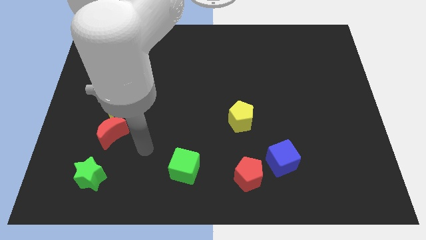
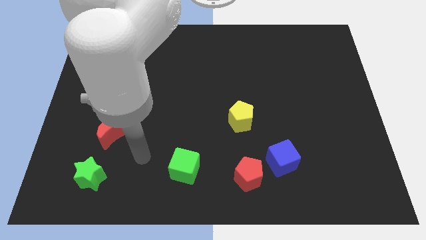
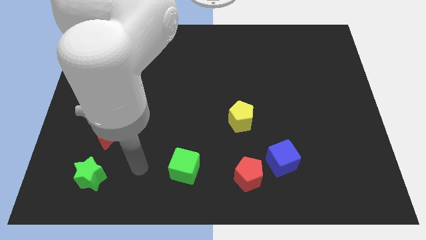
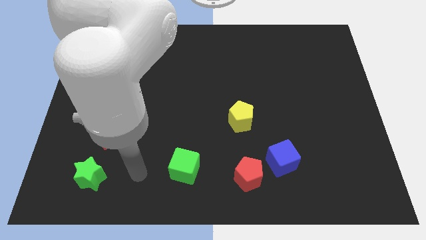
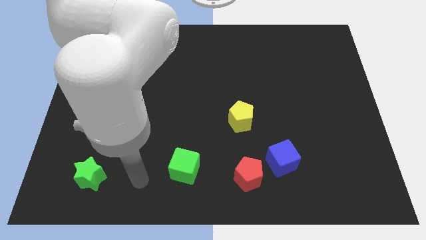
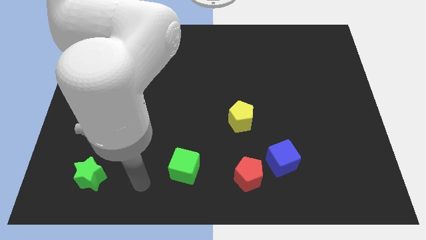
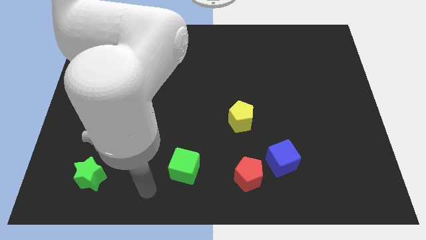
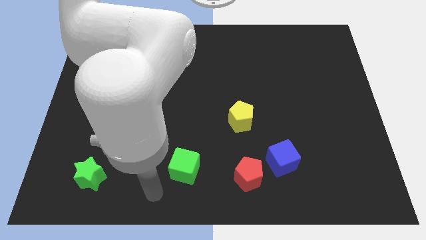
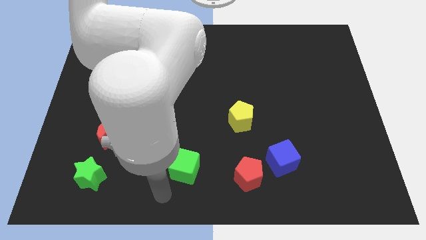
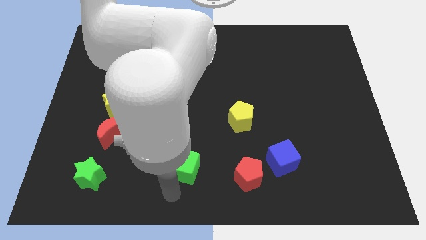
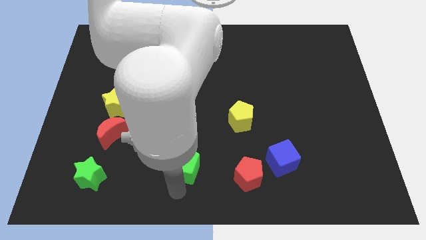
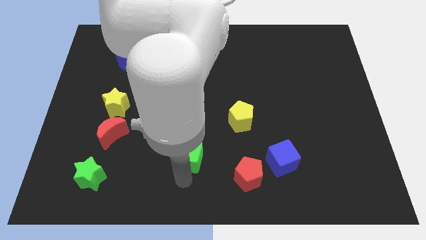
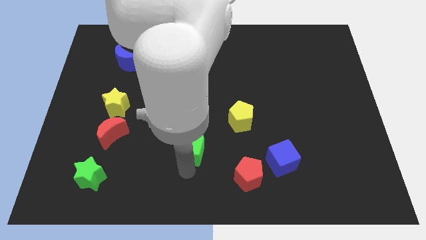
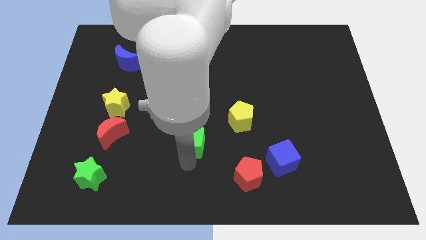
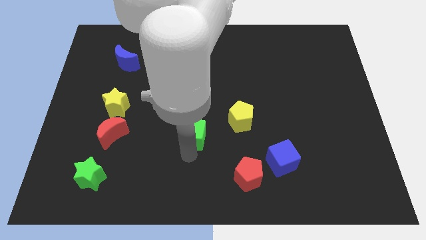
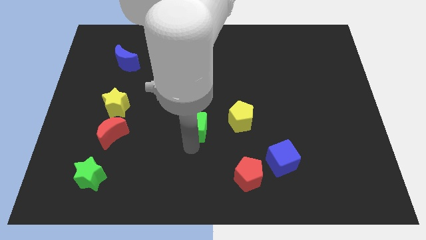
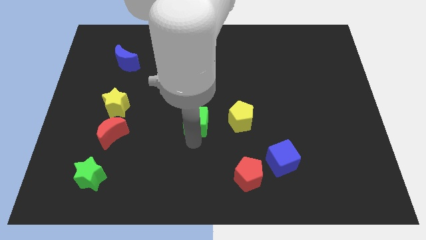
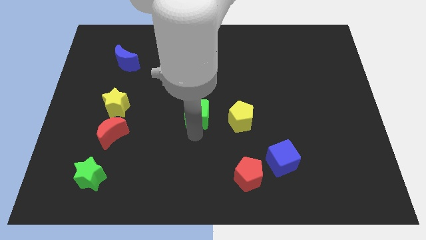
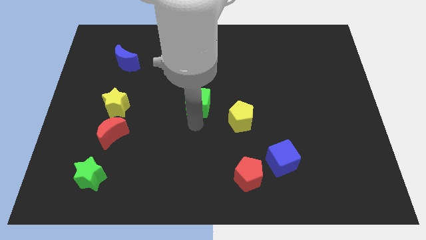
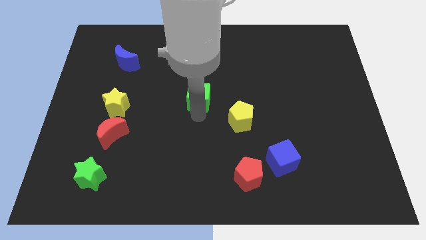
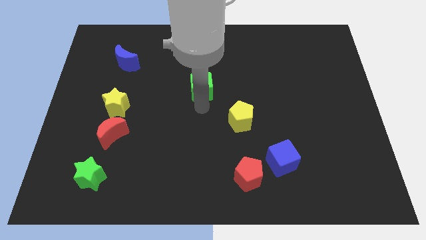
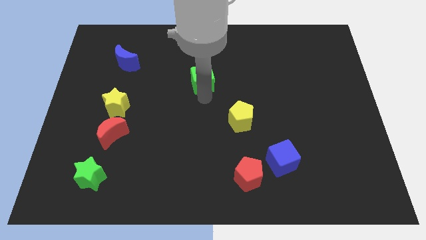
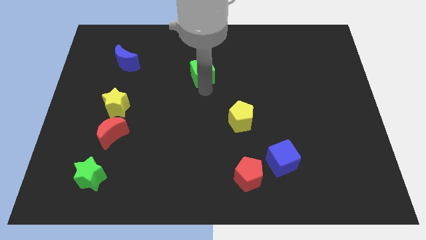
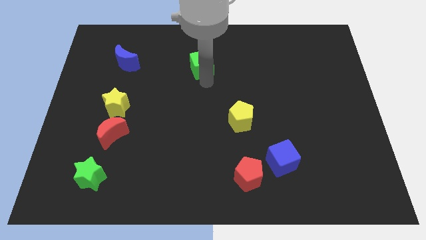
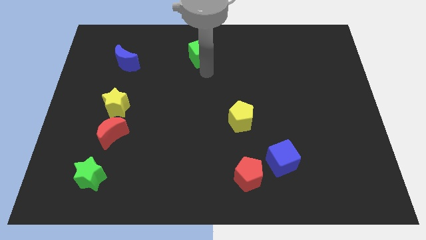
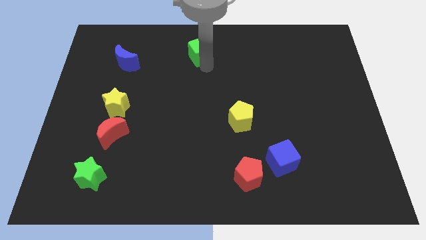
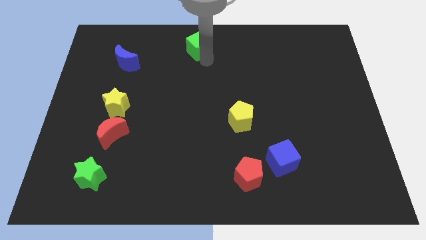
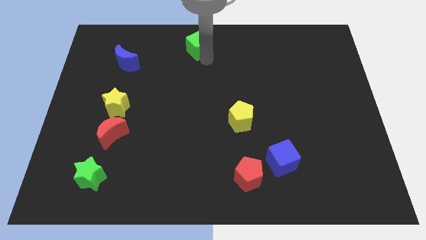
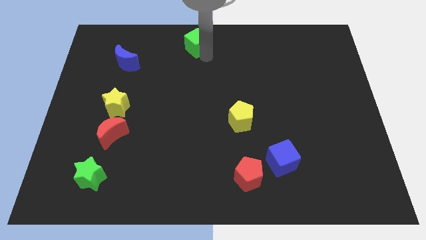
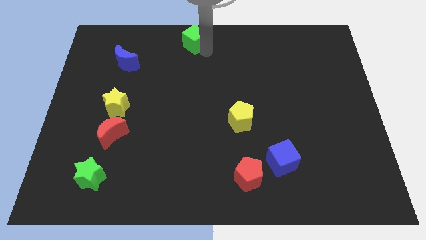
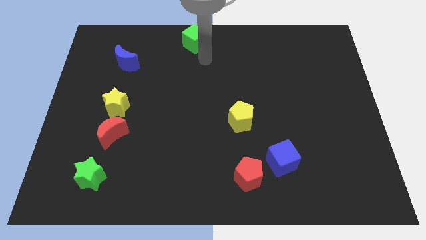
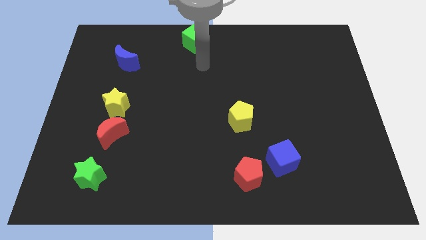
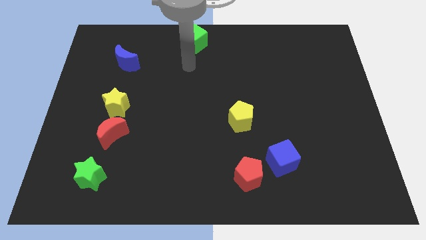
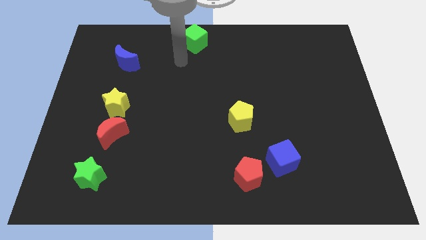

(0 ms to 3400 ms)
push the green cube towards the top center of the board

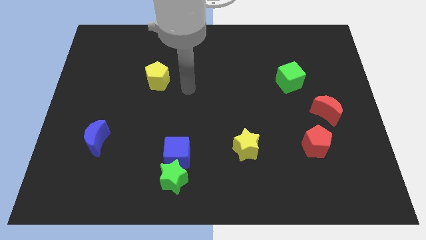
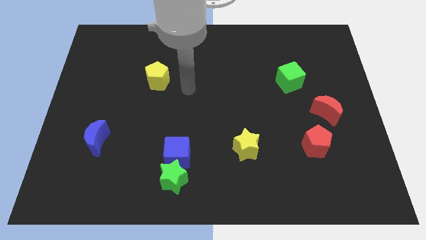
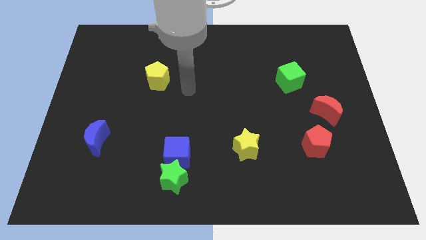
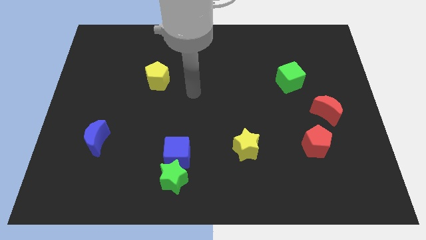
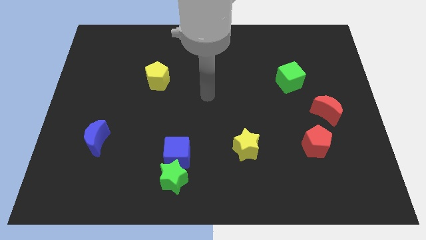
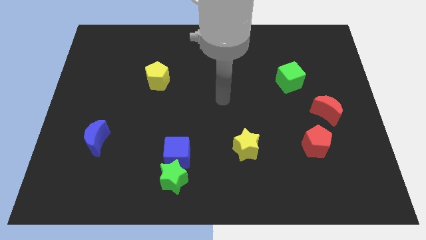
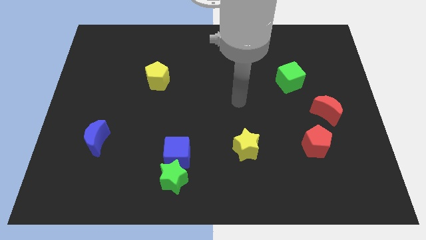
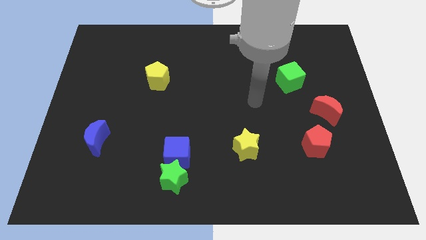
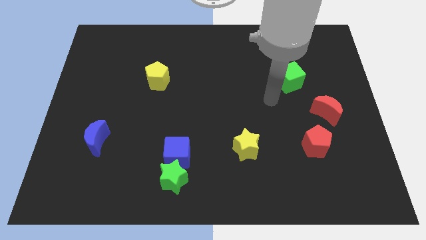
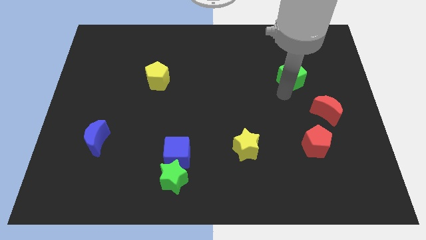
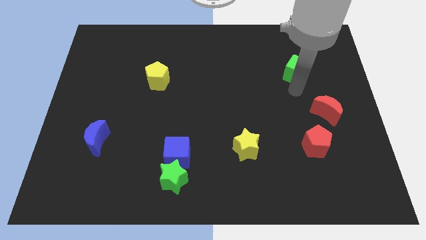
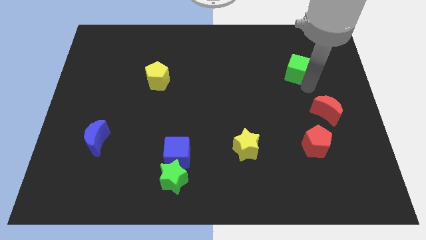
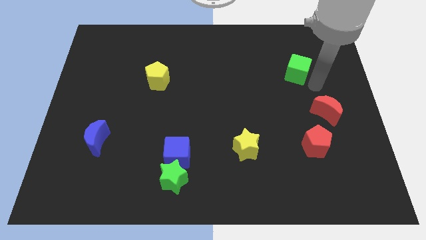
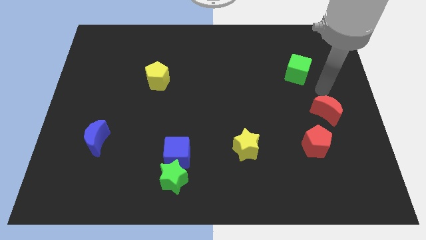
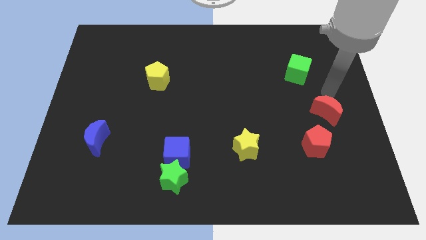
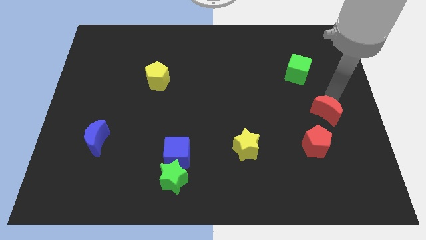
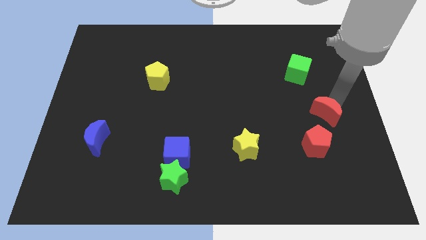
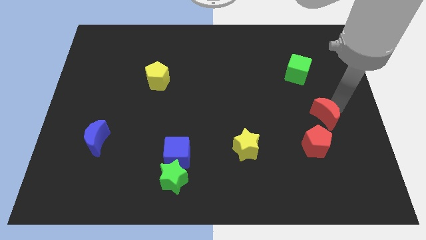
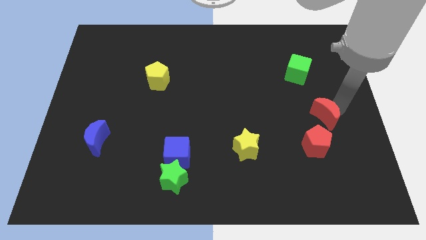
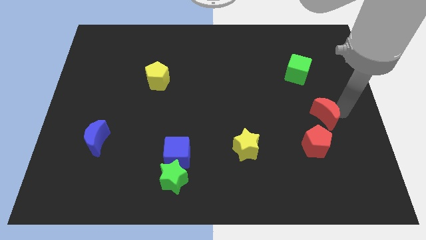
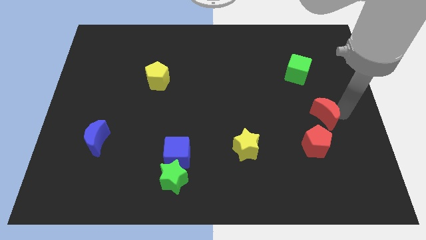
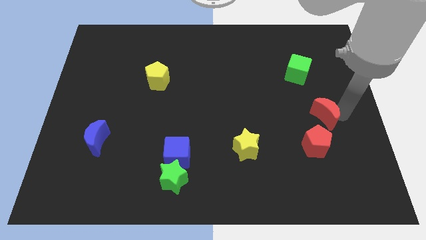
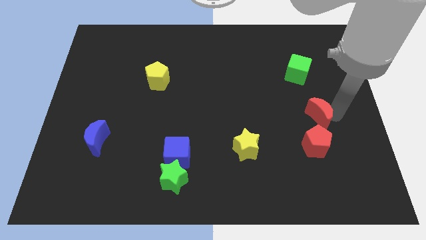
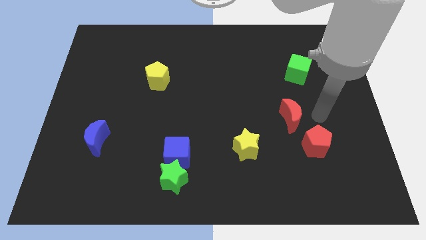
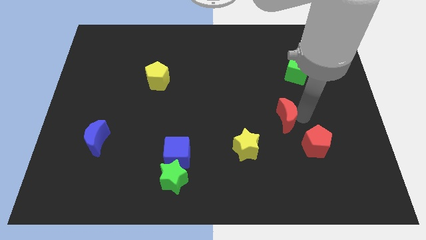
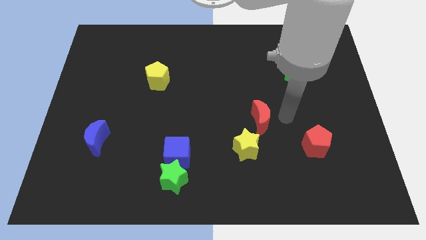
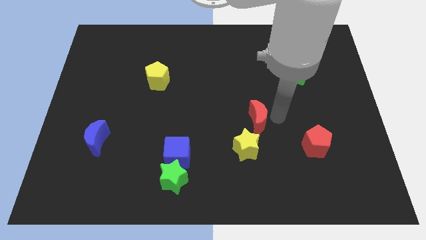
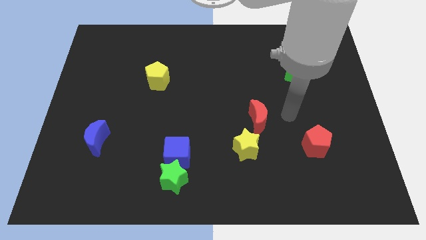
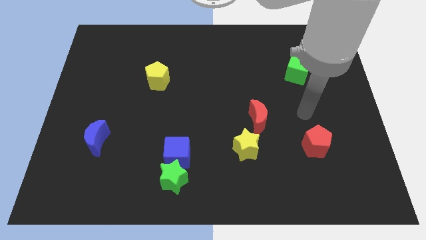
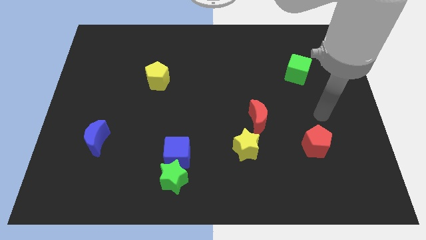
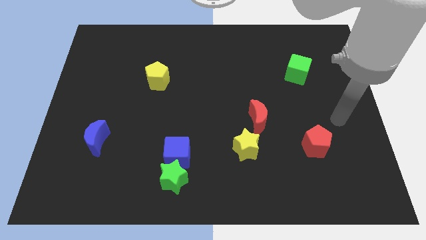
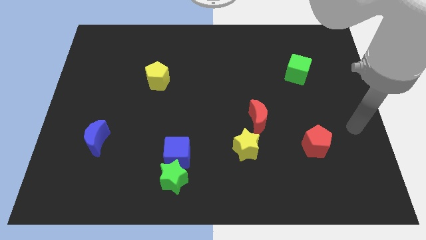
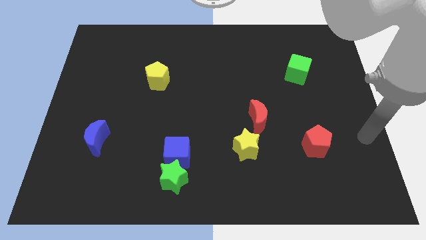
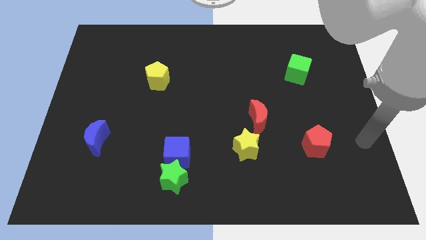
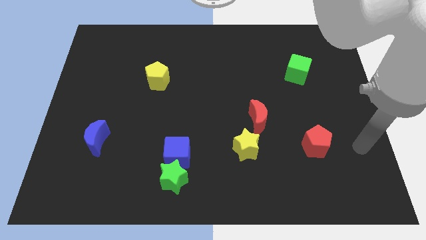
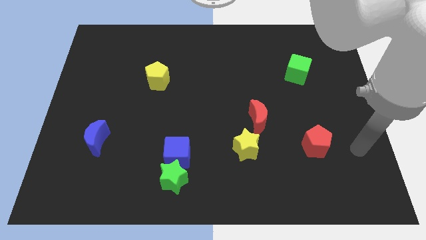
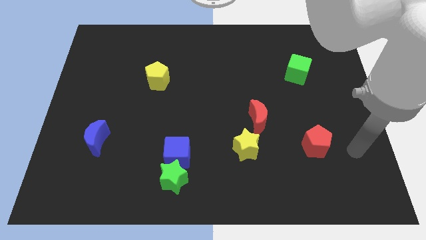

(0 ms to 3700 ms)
move the red crescent above to the yellow star

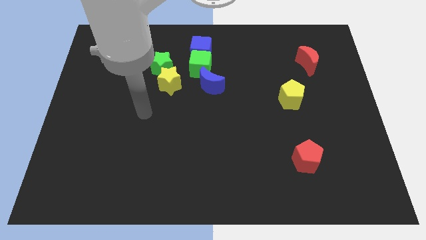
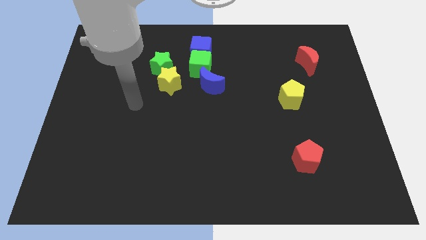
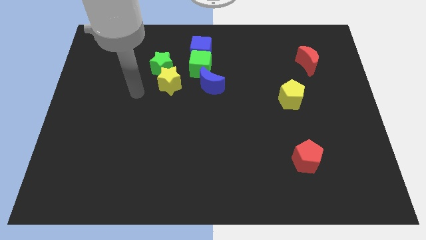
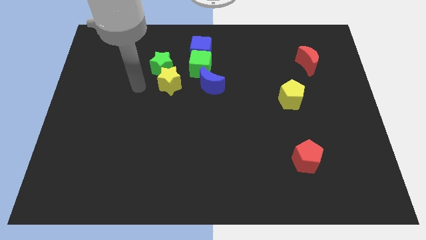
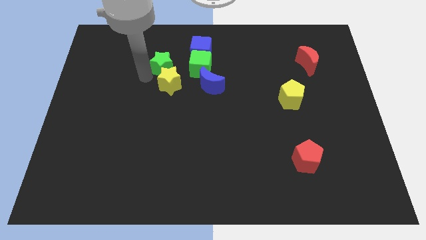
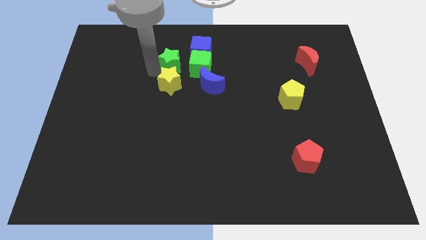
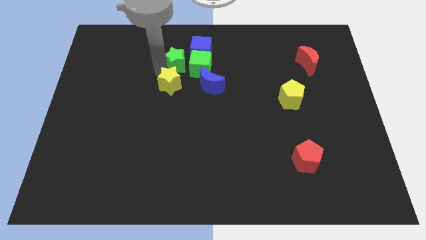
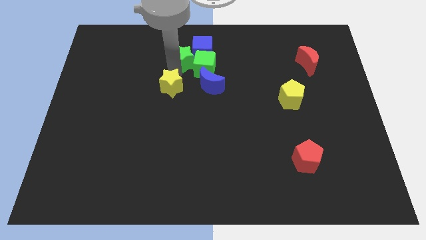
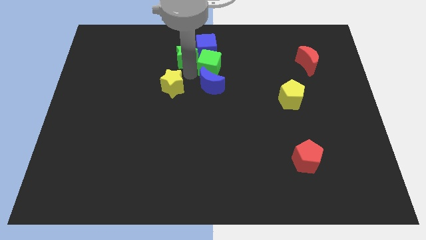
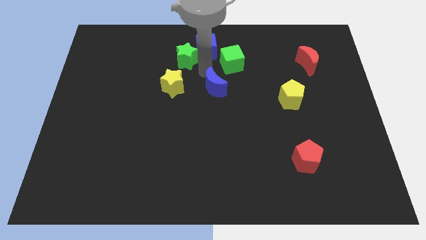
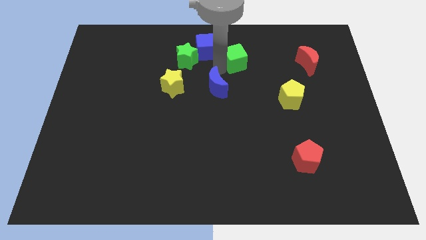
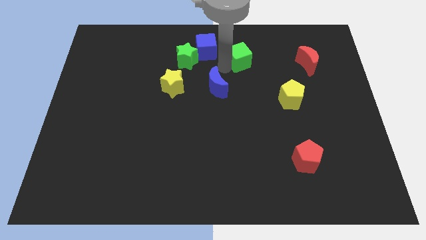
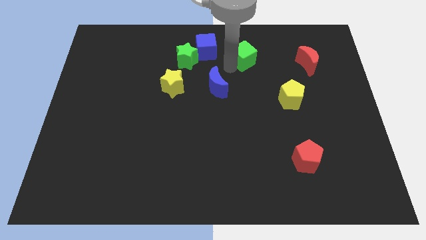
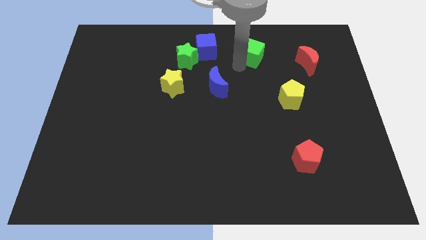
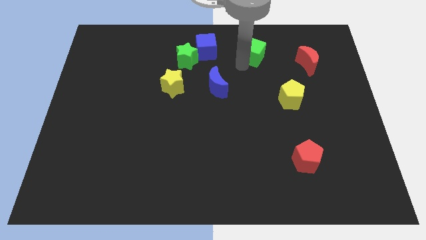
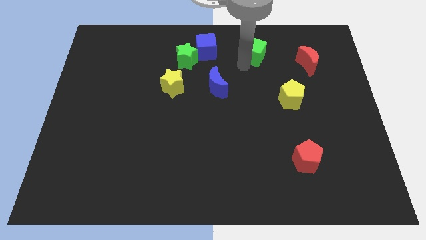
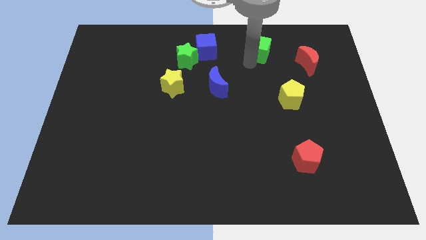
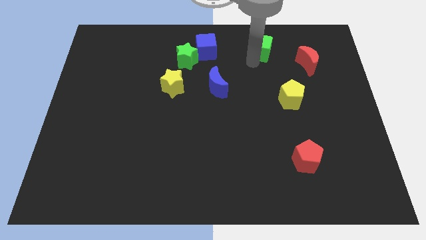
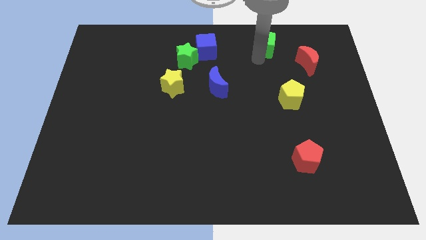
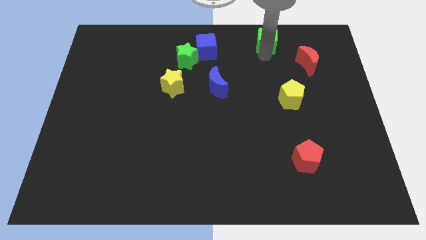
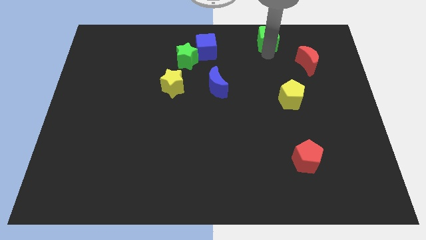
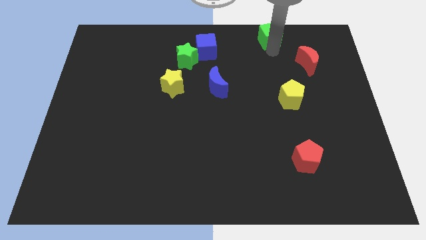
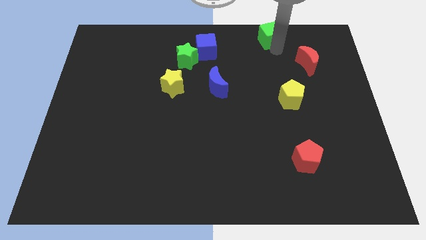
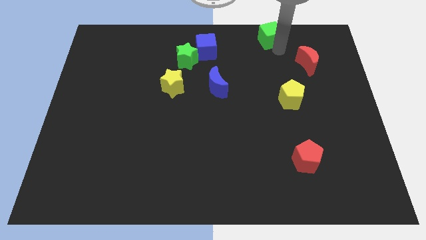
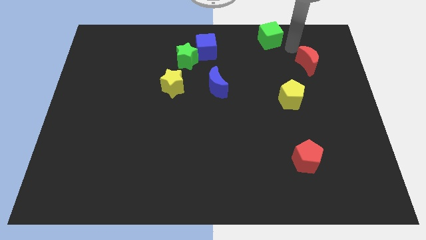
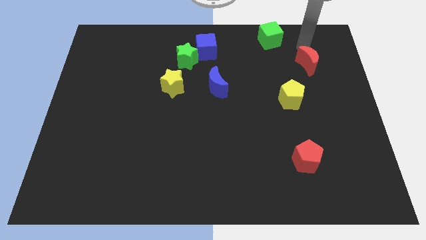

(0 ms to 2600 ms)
push the green cube top to the board
